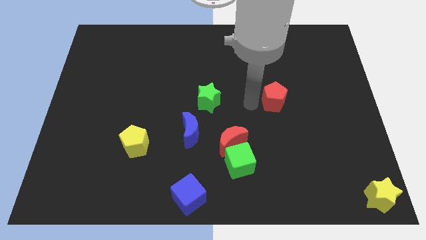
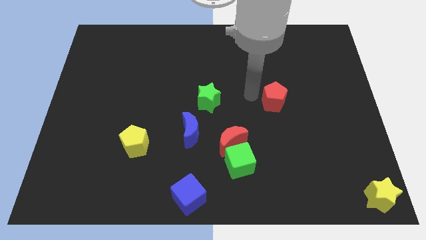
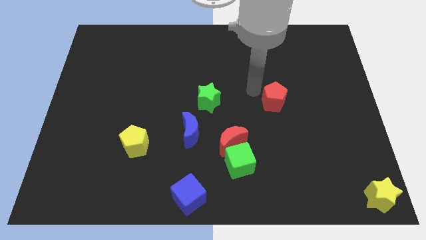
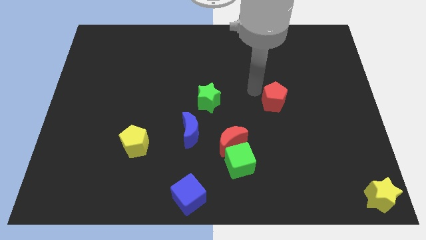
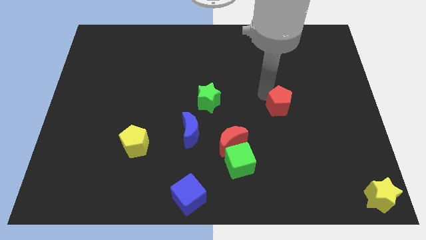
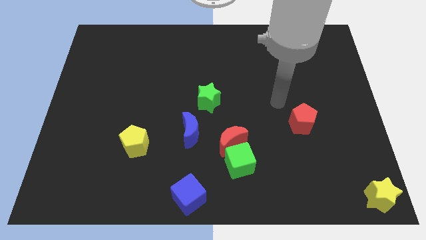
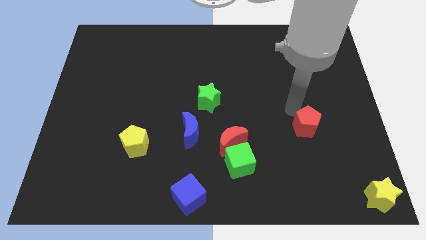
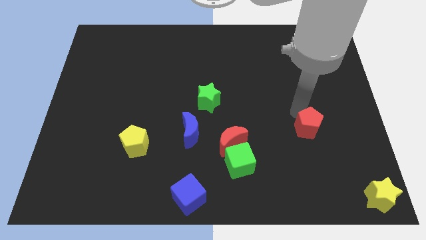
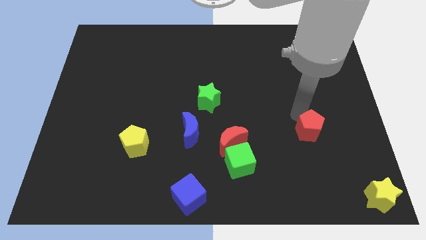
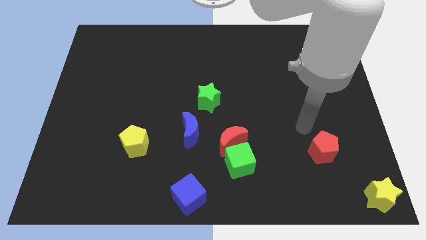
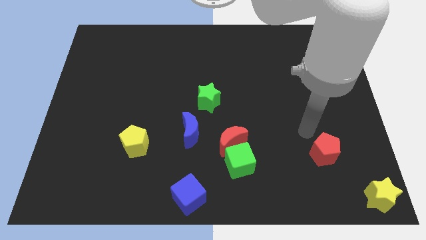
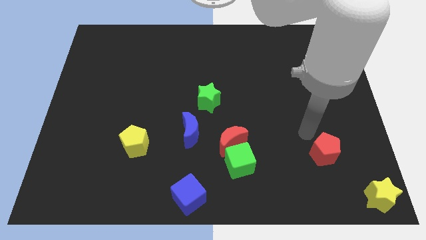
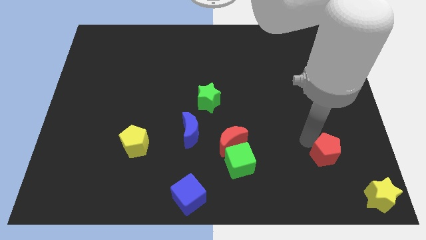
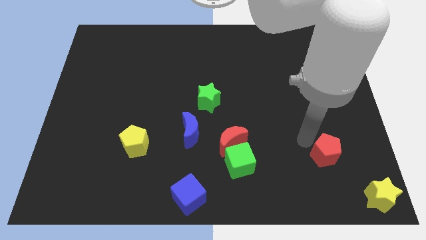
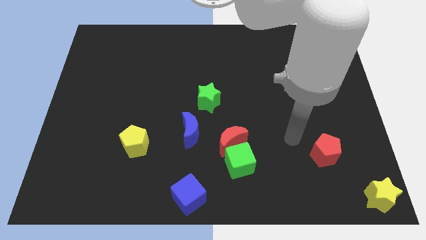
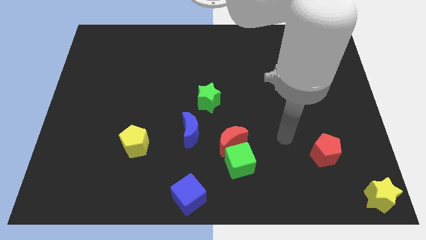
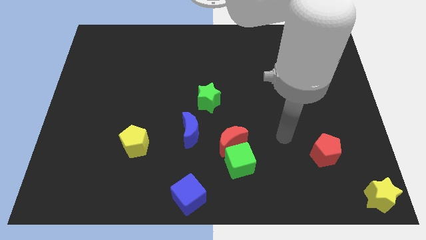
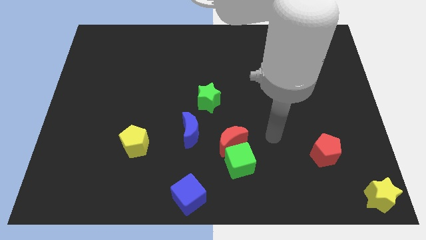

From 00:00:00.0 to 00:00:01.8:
move red pentagon towards the yellow star

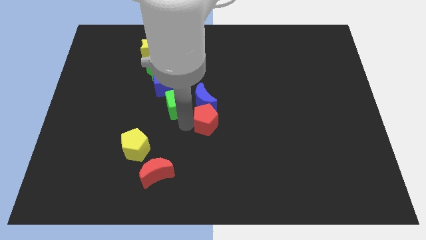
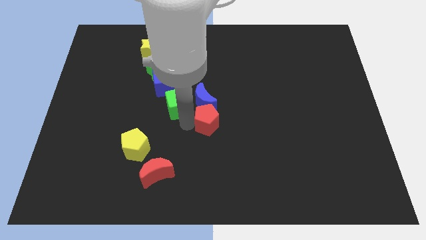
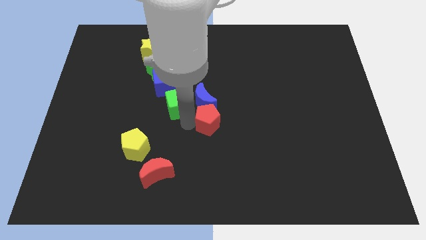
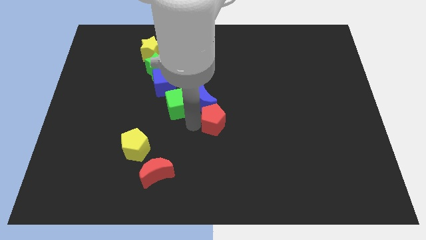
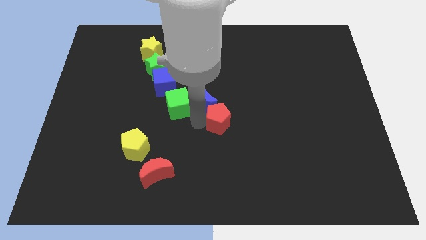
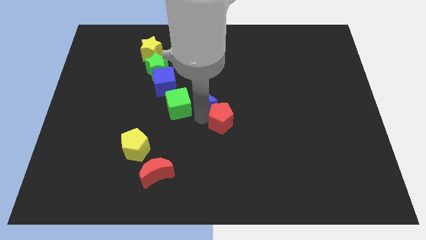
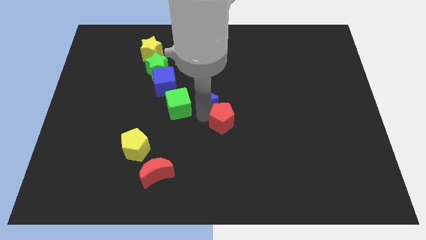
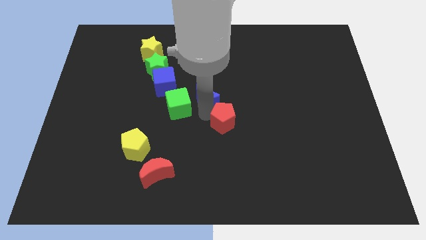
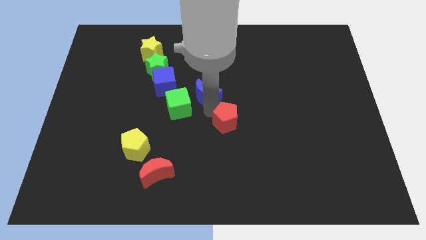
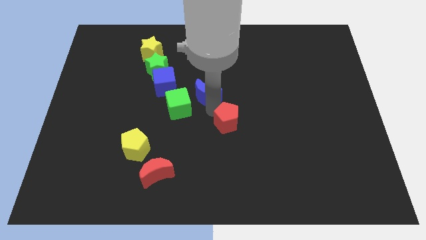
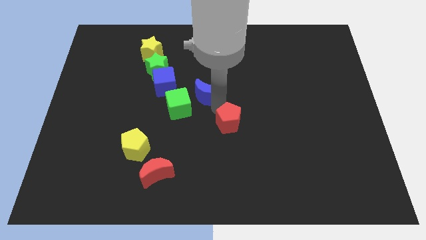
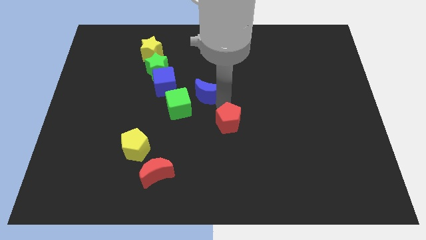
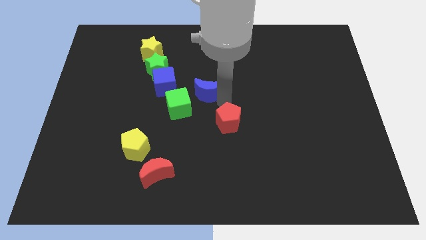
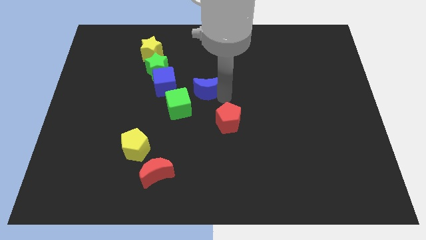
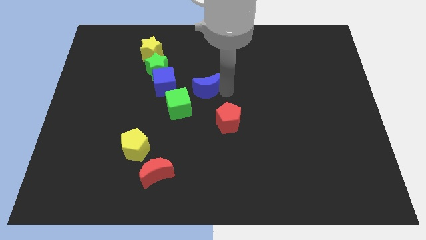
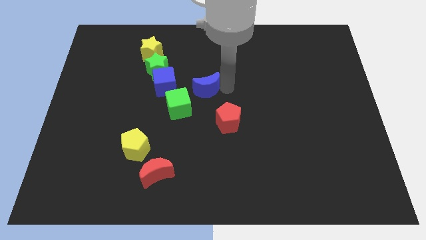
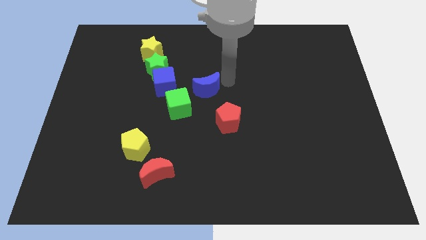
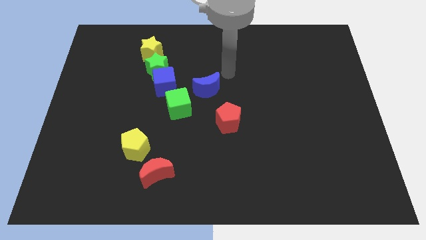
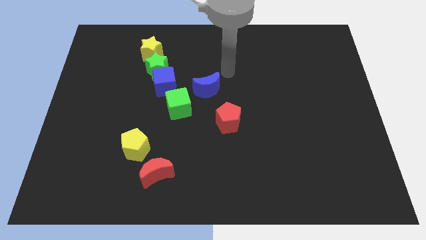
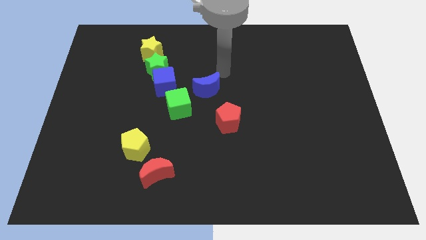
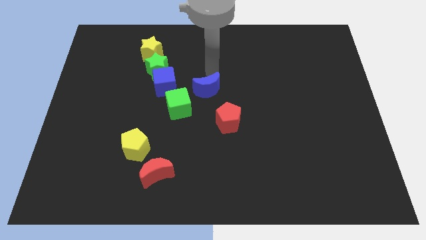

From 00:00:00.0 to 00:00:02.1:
move the red pentagon and the blue moon away from each other

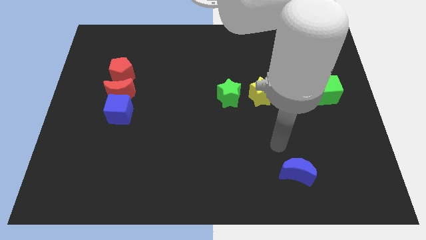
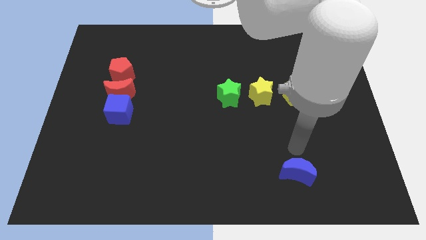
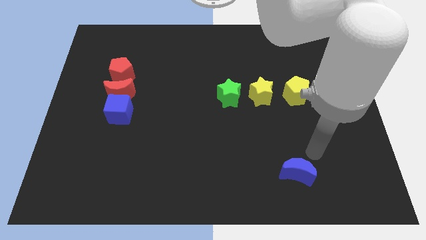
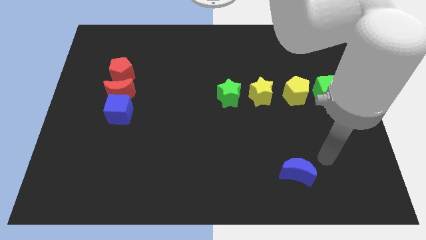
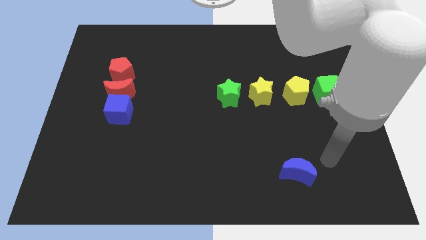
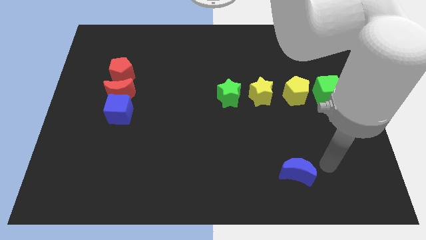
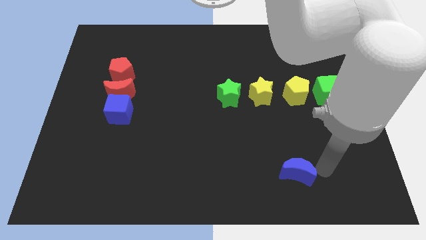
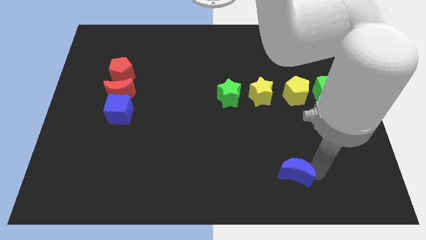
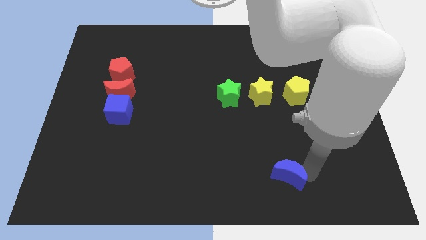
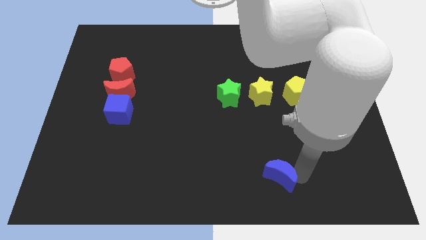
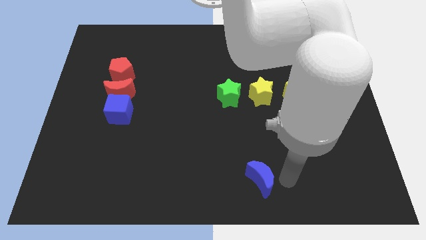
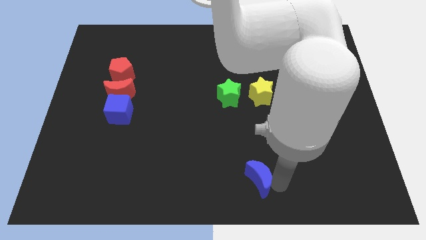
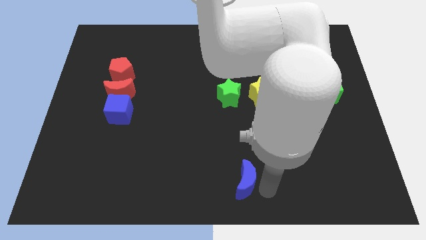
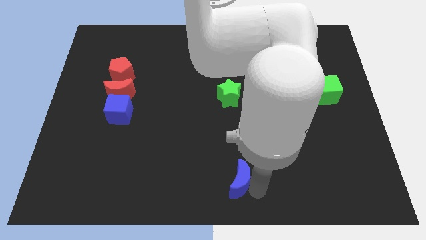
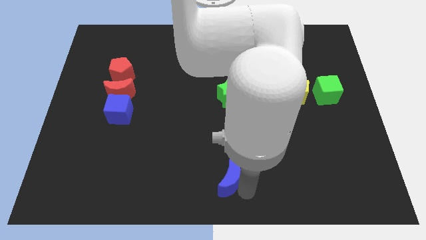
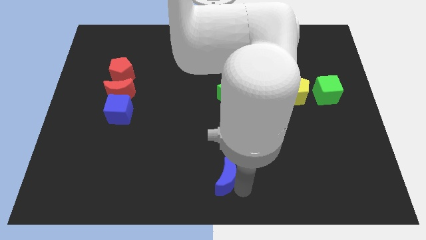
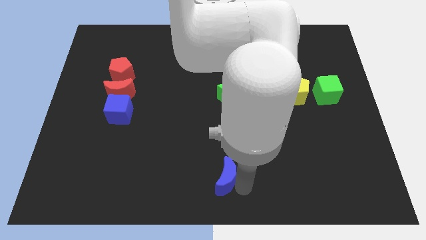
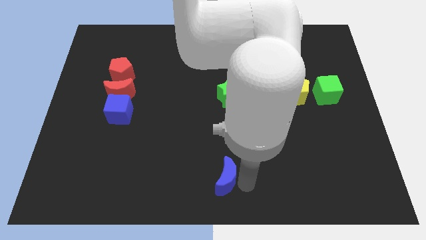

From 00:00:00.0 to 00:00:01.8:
push the blue crescent slightly to the left

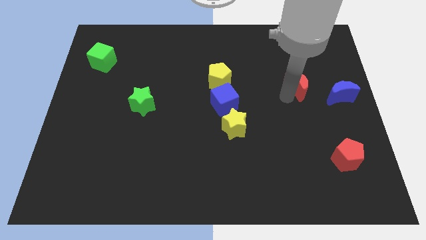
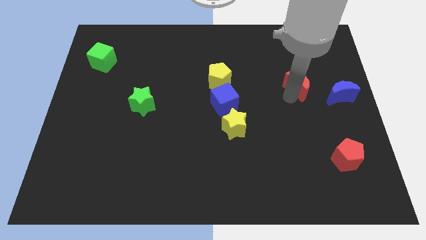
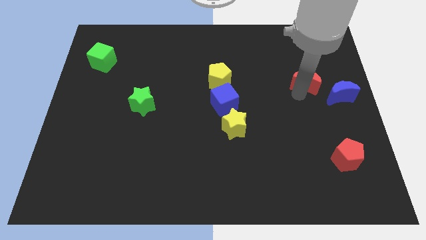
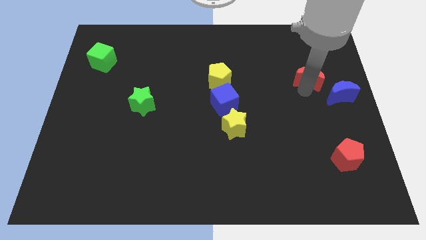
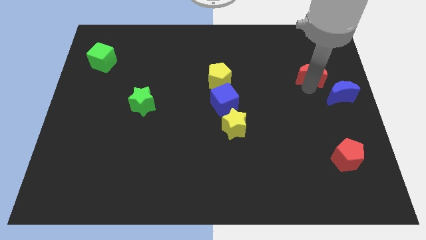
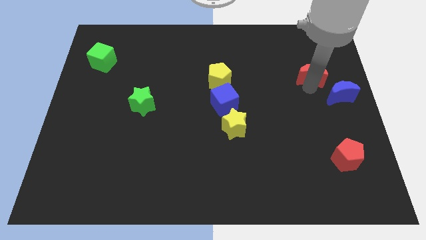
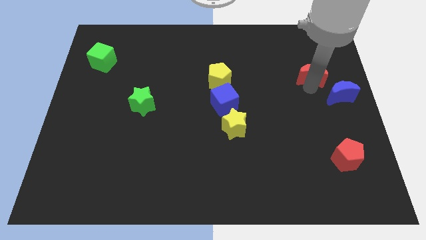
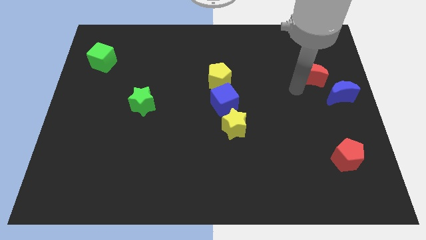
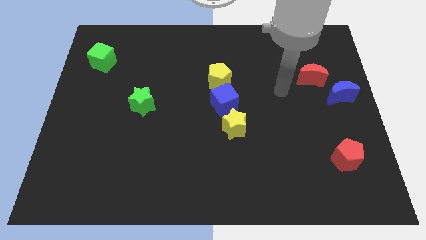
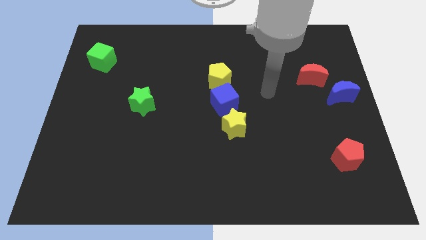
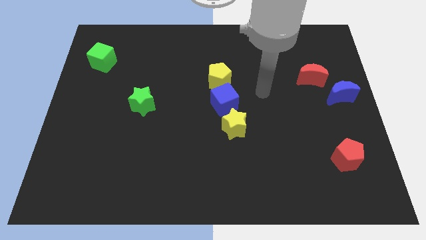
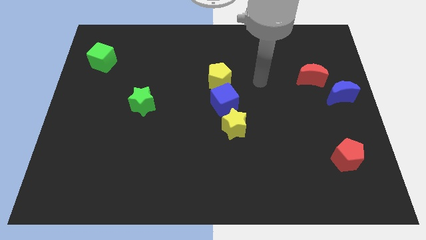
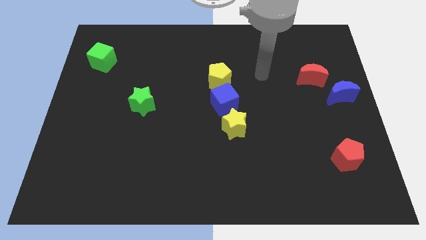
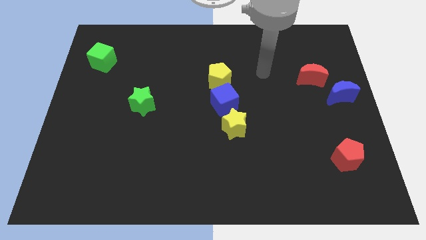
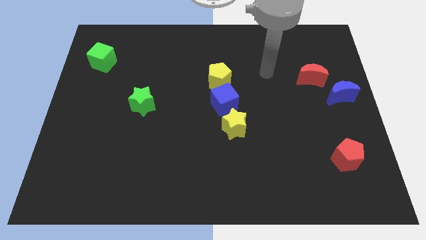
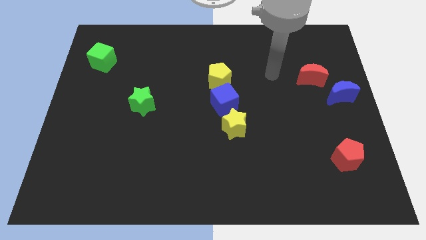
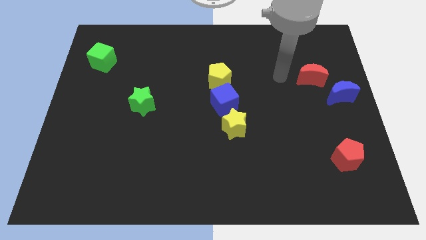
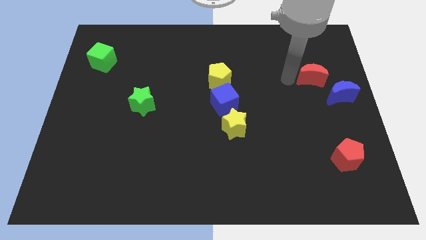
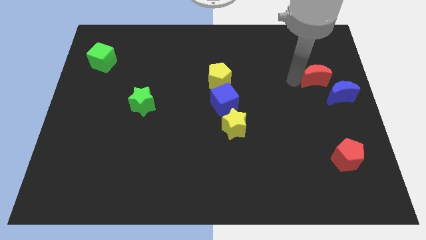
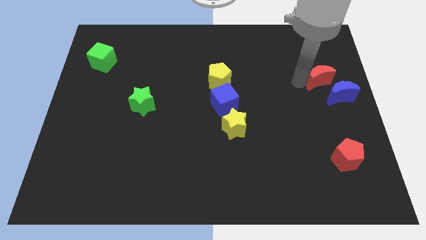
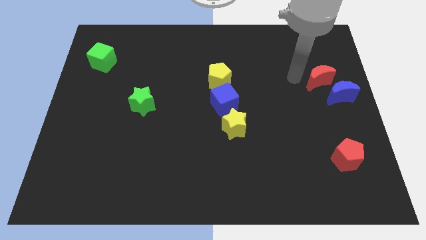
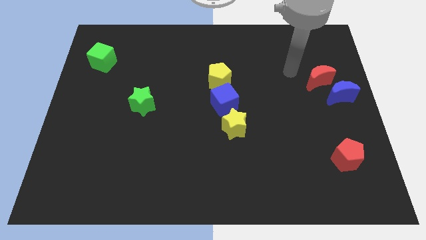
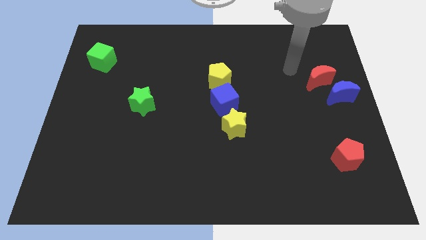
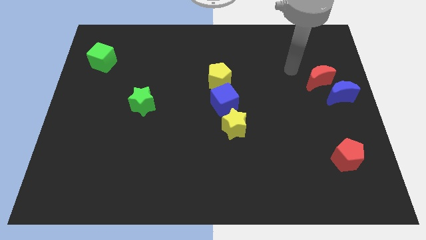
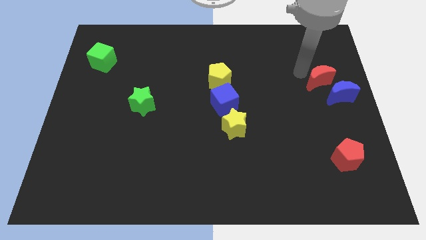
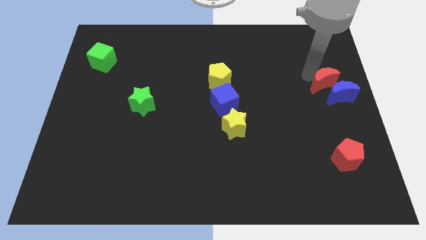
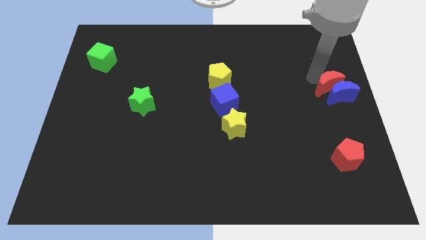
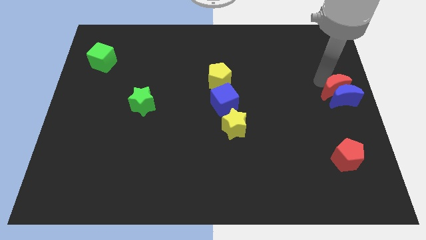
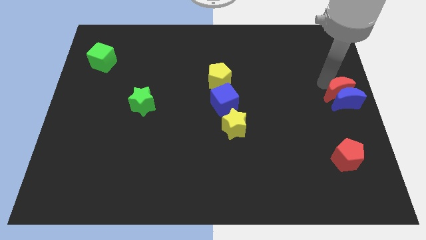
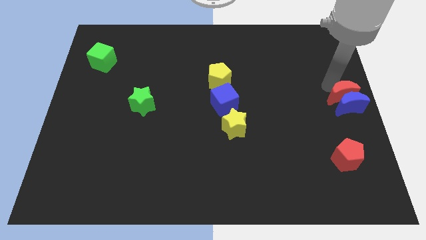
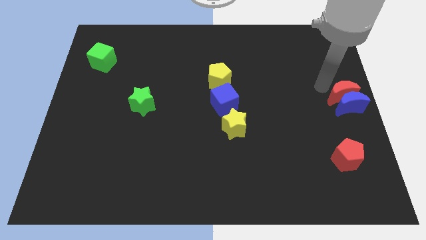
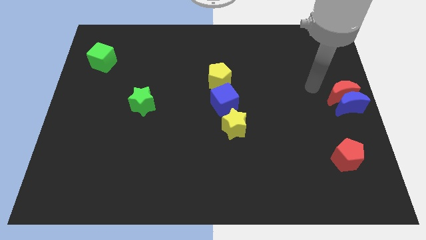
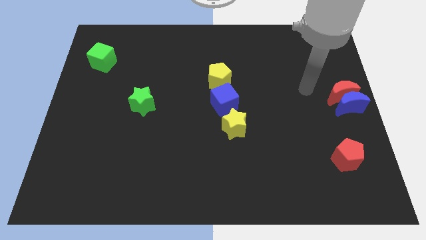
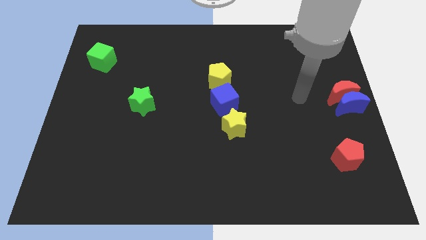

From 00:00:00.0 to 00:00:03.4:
place the red moon above the blue moon
